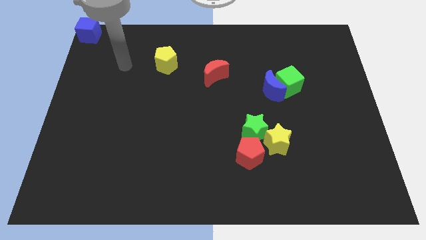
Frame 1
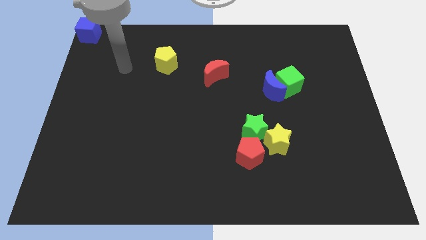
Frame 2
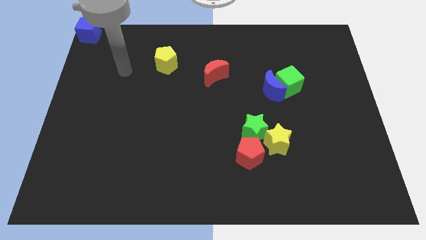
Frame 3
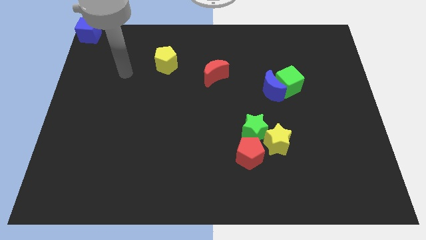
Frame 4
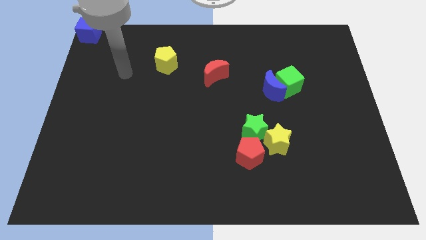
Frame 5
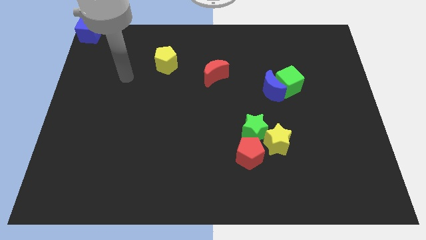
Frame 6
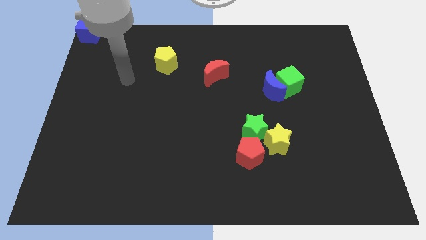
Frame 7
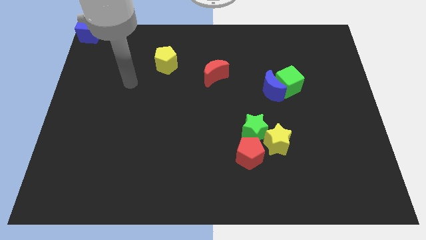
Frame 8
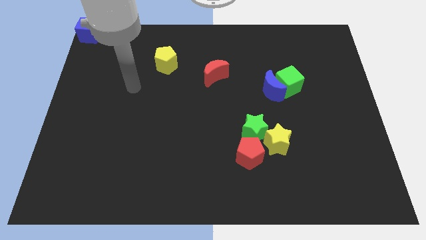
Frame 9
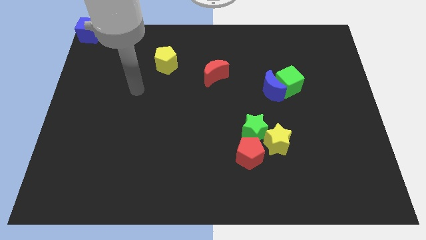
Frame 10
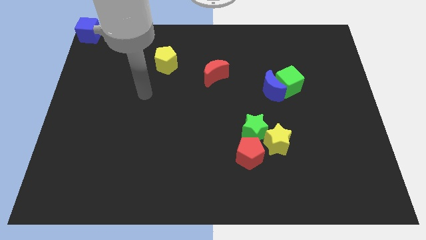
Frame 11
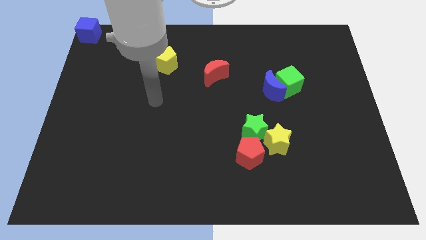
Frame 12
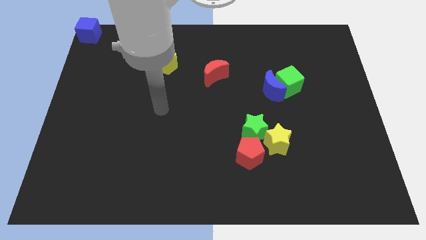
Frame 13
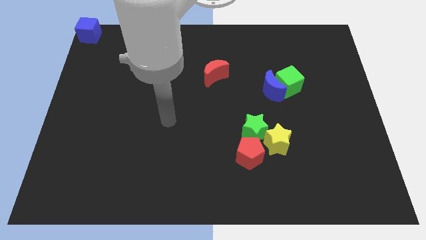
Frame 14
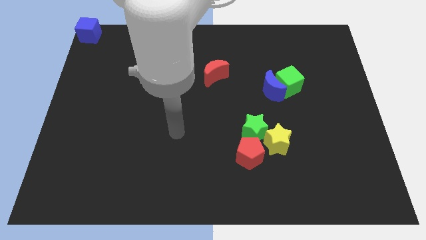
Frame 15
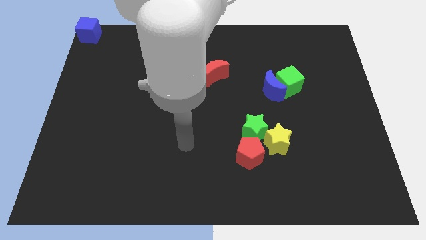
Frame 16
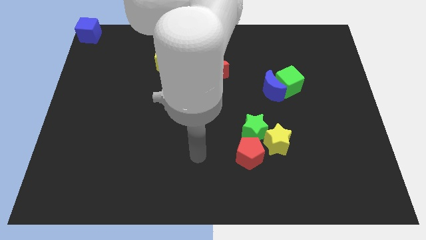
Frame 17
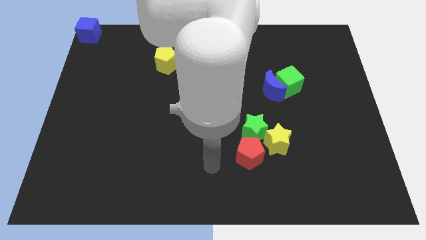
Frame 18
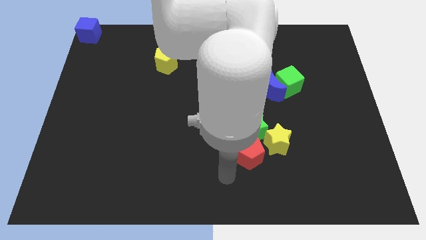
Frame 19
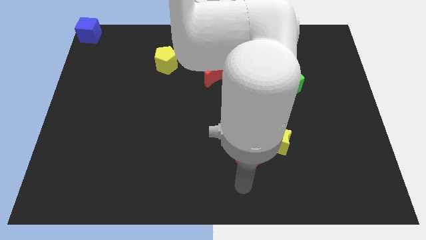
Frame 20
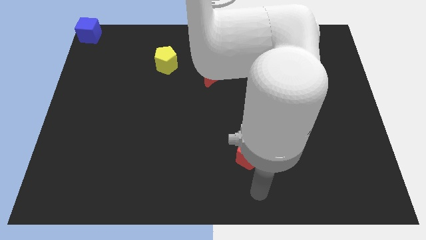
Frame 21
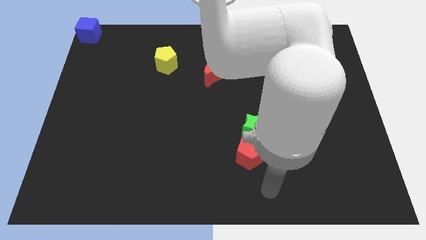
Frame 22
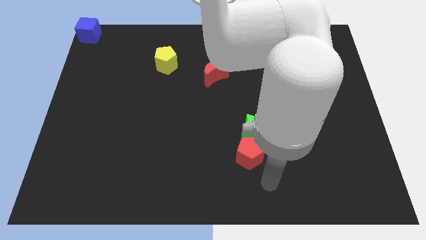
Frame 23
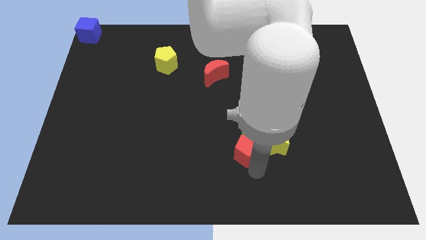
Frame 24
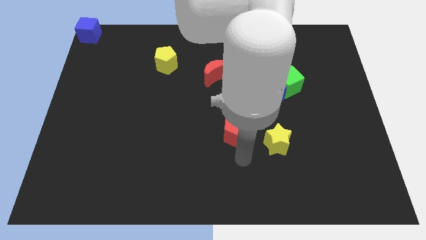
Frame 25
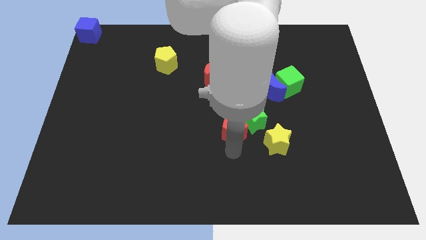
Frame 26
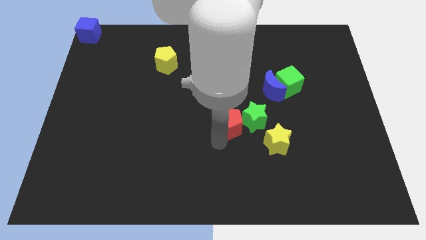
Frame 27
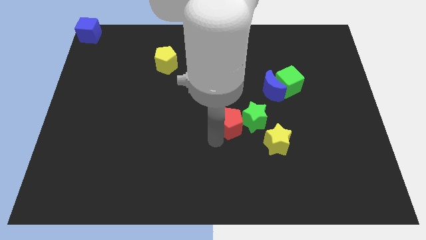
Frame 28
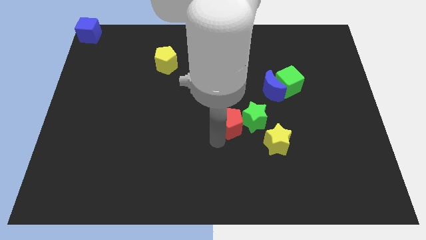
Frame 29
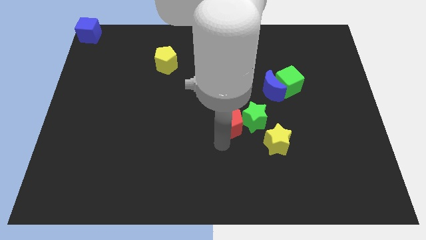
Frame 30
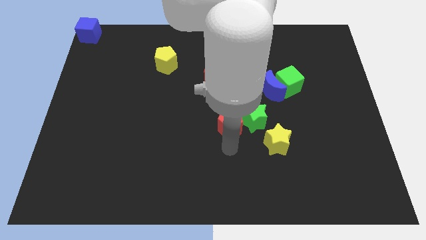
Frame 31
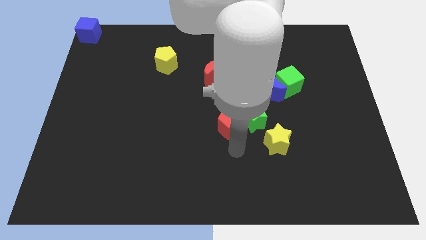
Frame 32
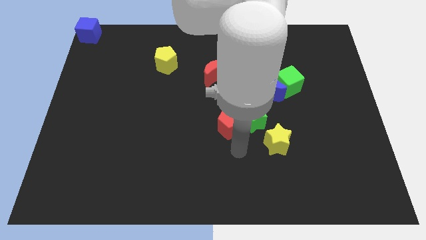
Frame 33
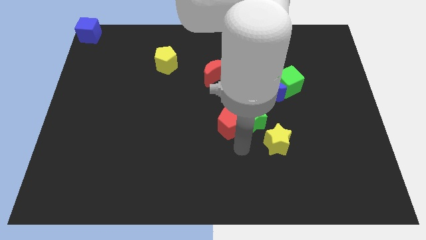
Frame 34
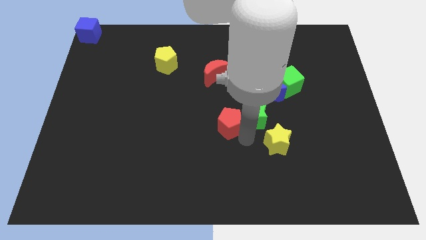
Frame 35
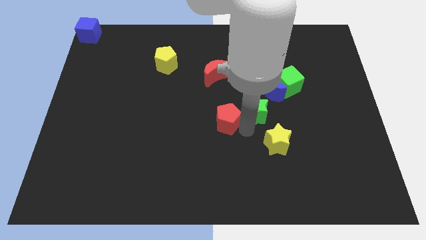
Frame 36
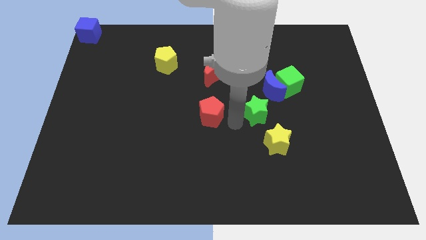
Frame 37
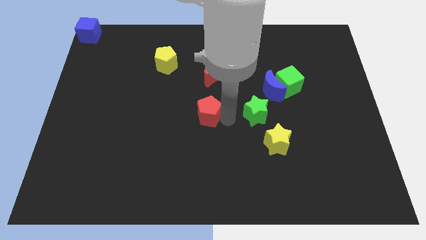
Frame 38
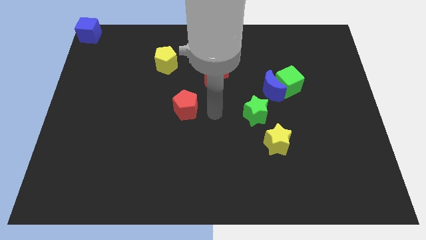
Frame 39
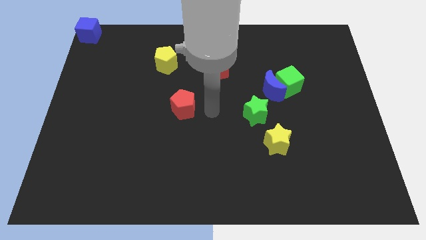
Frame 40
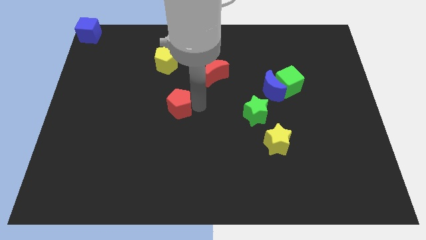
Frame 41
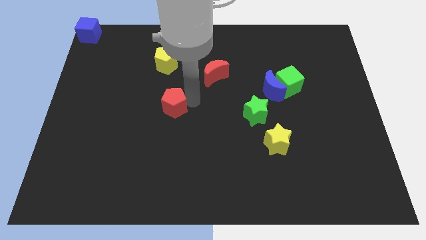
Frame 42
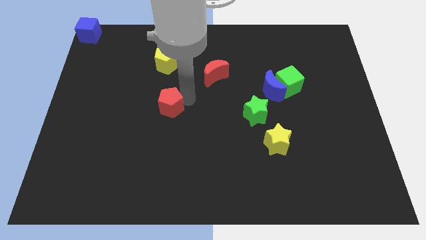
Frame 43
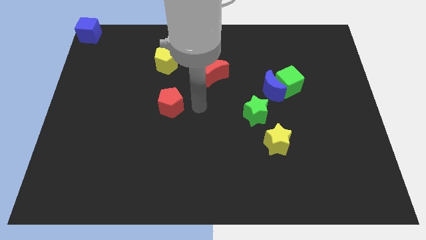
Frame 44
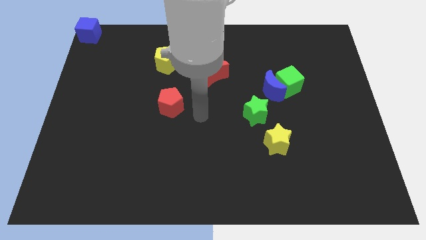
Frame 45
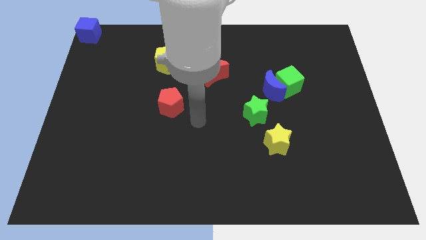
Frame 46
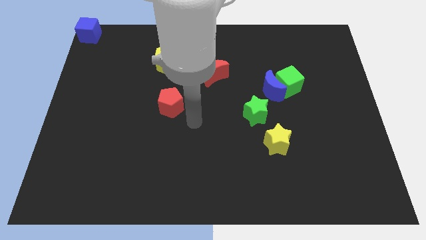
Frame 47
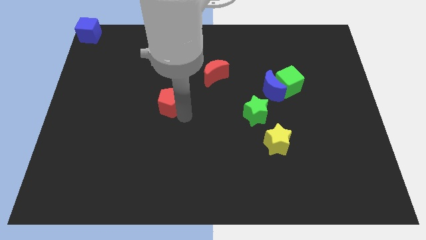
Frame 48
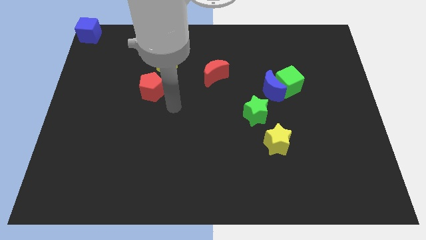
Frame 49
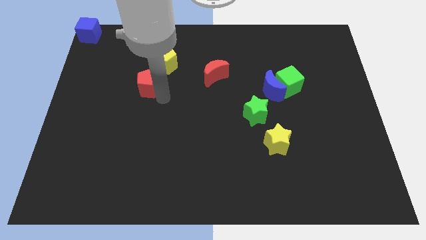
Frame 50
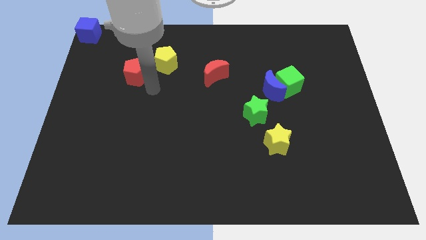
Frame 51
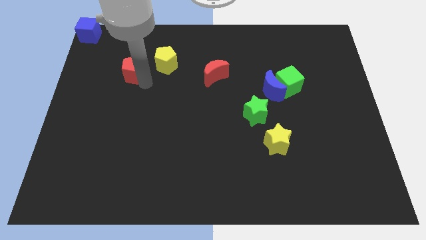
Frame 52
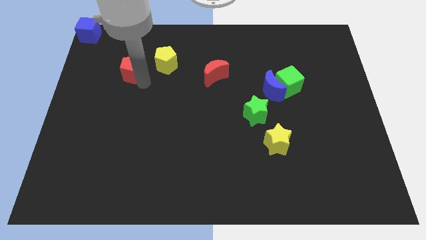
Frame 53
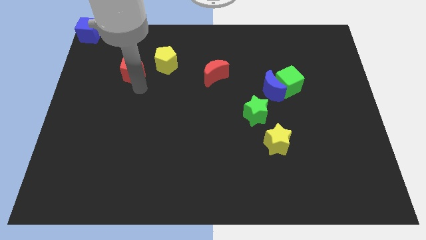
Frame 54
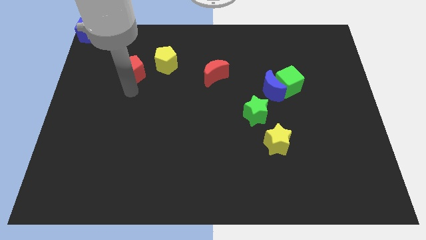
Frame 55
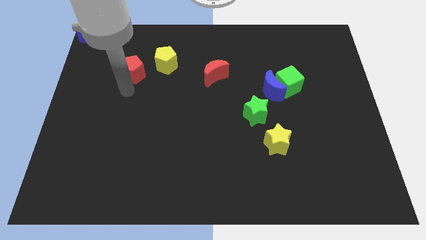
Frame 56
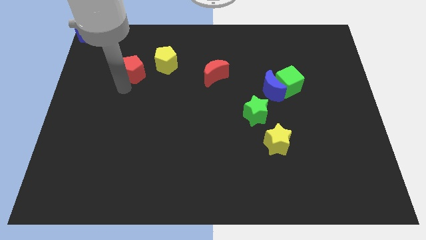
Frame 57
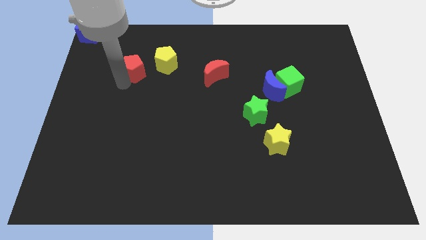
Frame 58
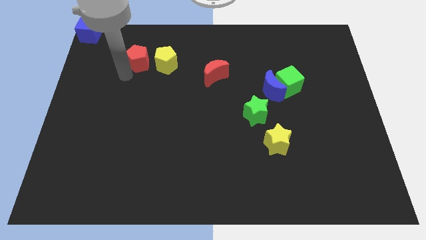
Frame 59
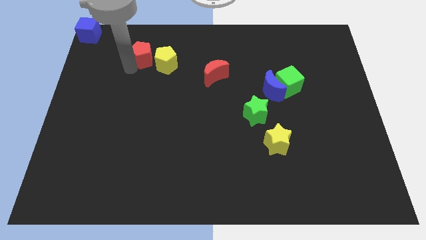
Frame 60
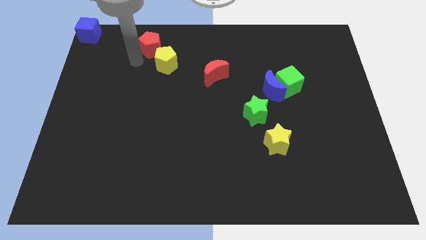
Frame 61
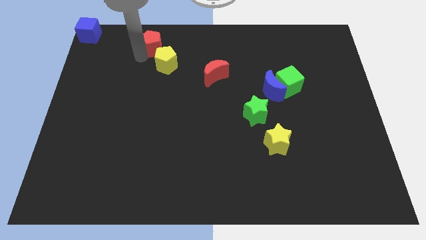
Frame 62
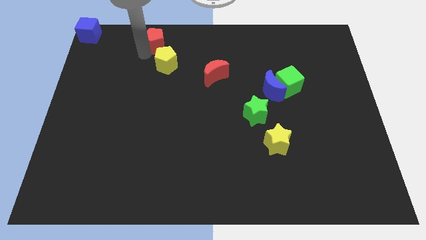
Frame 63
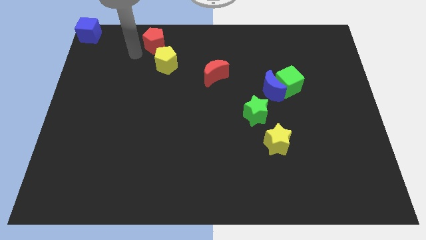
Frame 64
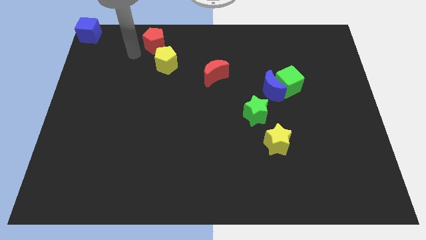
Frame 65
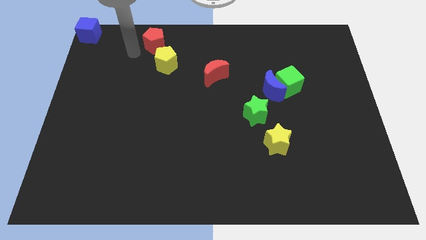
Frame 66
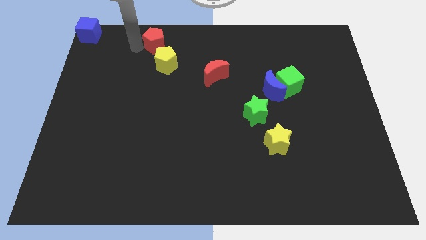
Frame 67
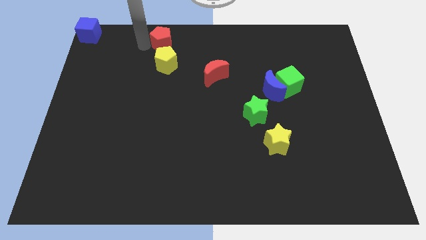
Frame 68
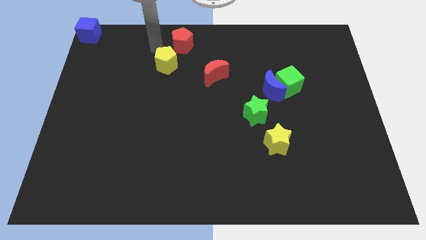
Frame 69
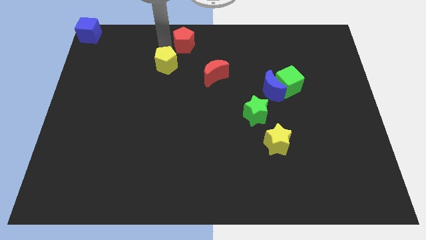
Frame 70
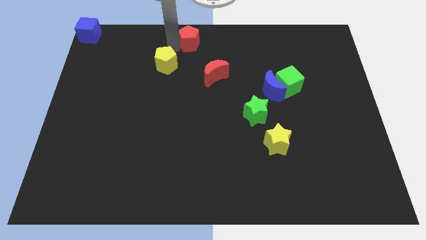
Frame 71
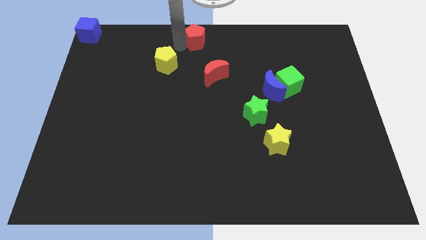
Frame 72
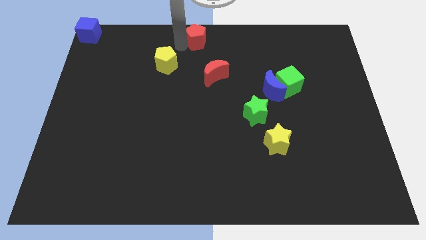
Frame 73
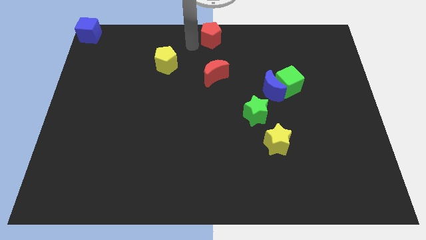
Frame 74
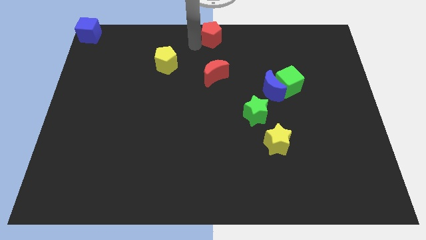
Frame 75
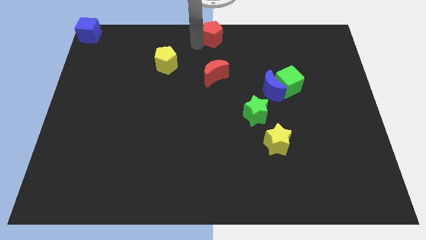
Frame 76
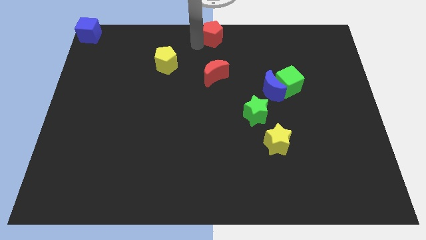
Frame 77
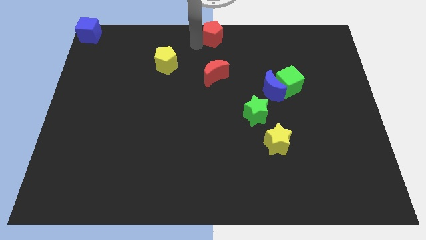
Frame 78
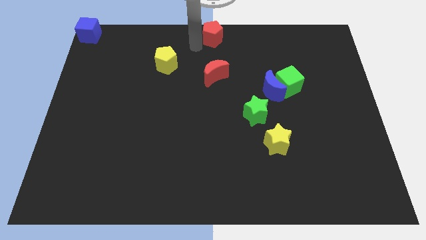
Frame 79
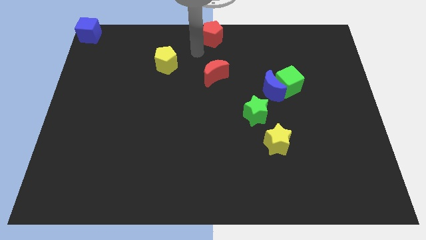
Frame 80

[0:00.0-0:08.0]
place your arm near to the red pentagon

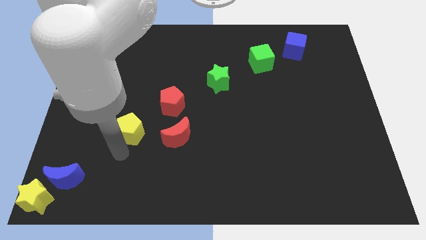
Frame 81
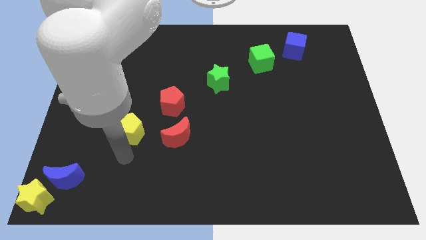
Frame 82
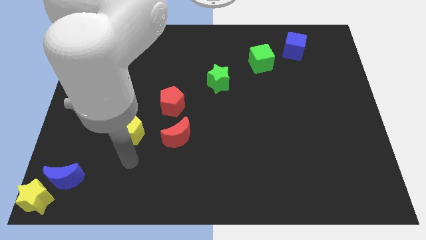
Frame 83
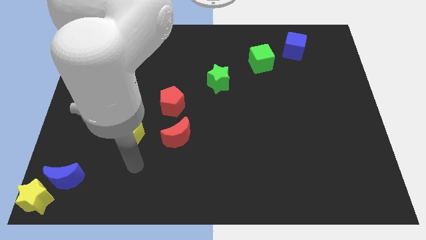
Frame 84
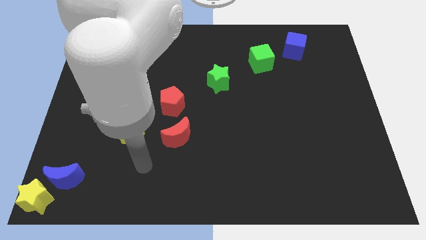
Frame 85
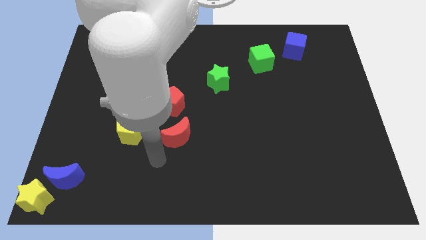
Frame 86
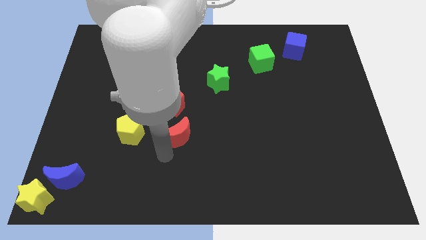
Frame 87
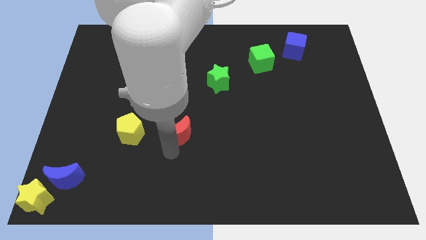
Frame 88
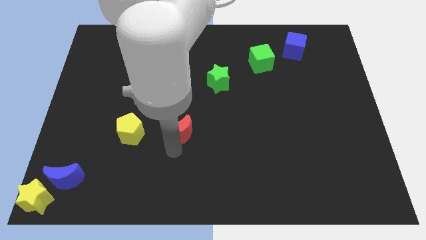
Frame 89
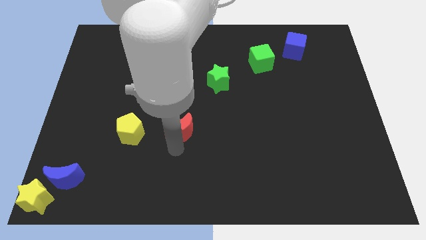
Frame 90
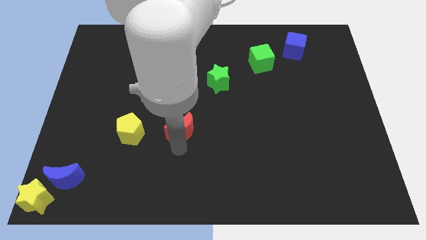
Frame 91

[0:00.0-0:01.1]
touch bottom side of red moon
